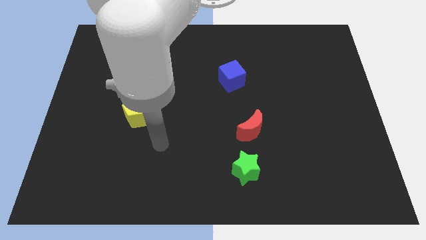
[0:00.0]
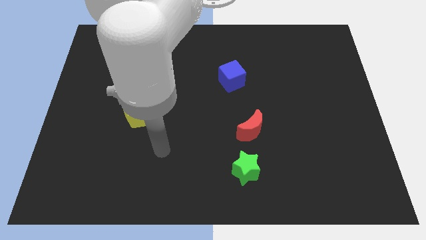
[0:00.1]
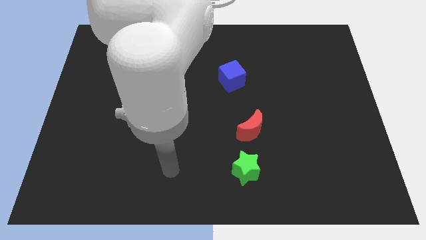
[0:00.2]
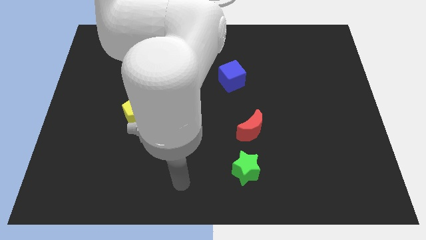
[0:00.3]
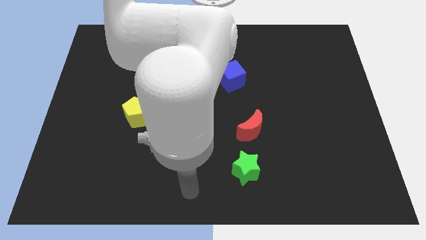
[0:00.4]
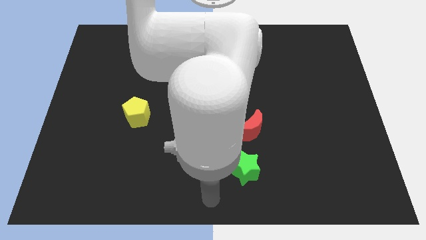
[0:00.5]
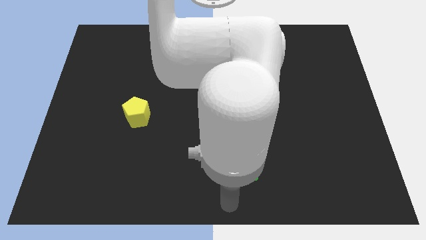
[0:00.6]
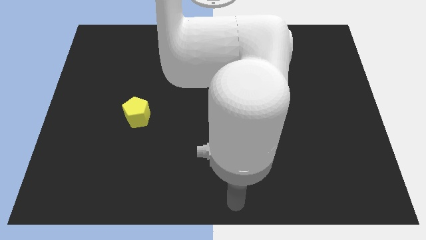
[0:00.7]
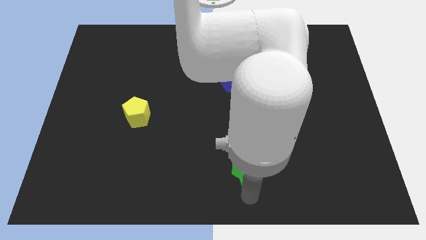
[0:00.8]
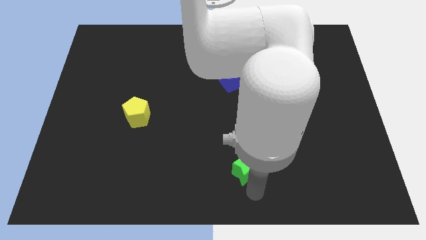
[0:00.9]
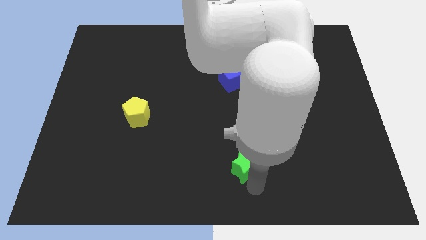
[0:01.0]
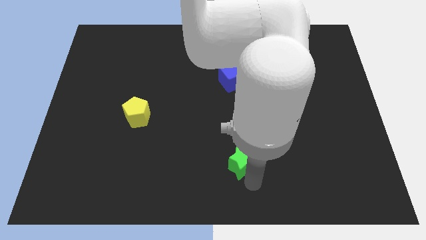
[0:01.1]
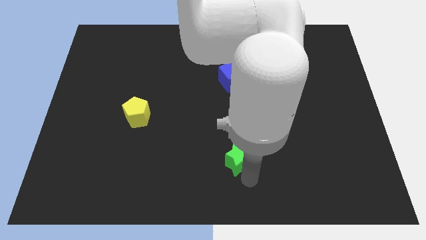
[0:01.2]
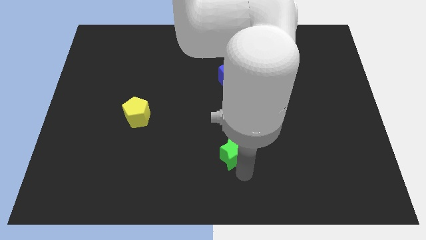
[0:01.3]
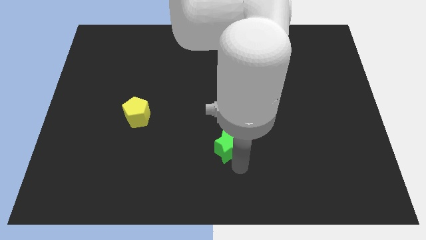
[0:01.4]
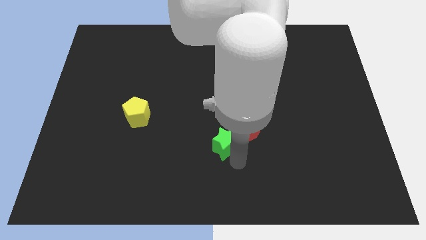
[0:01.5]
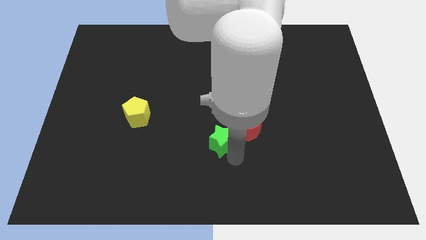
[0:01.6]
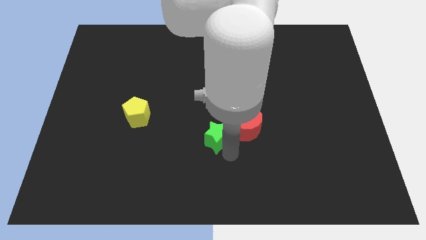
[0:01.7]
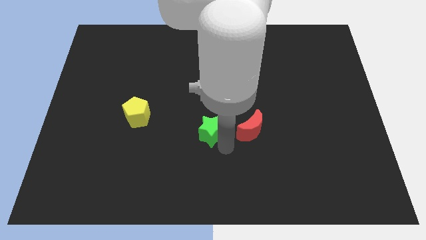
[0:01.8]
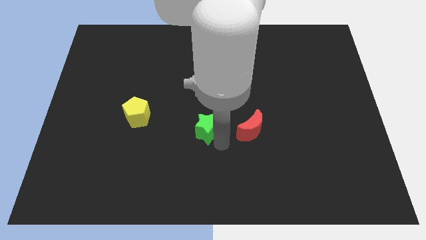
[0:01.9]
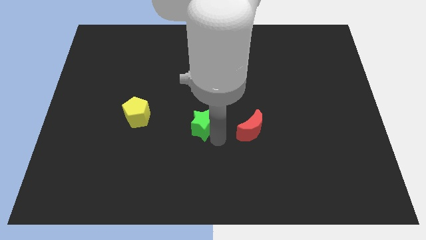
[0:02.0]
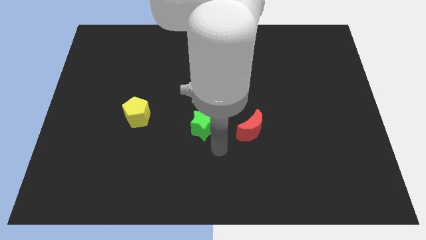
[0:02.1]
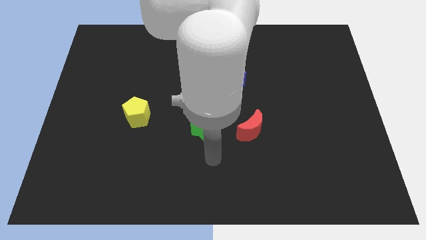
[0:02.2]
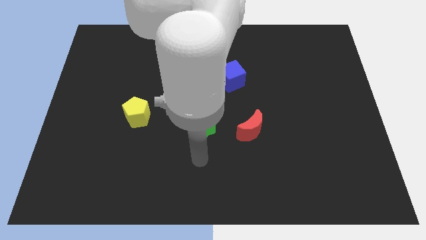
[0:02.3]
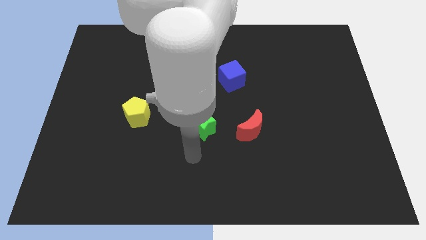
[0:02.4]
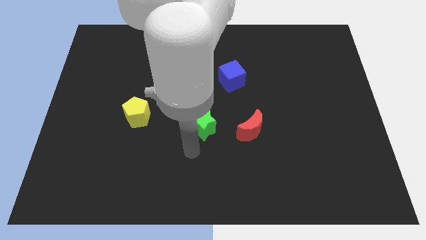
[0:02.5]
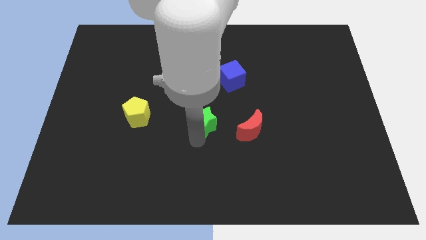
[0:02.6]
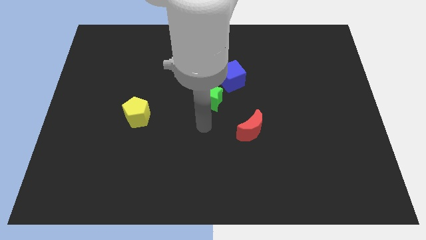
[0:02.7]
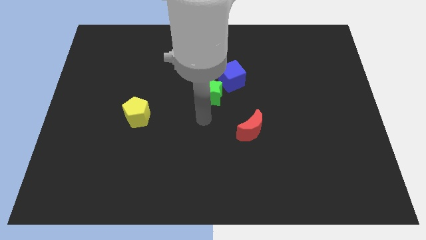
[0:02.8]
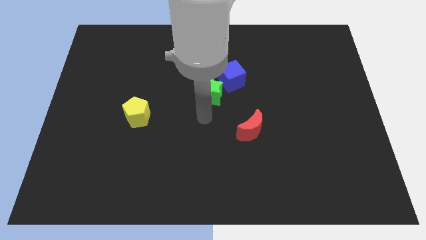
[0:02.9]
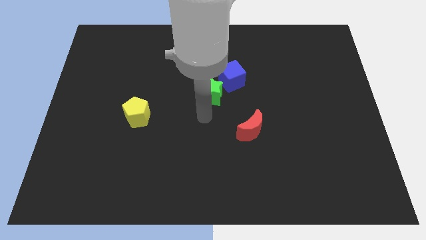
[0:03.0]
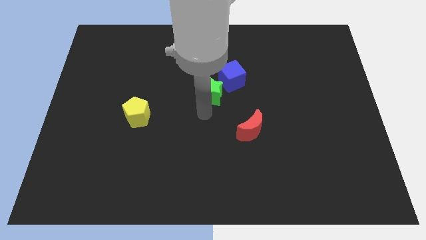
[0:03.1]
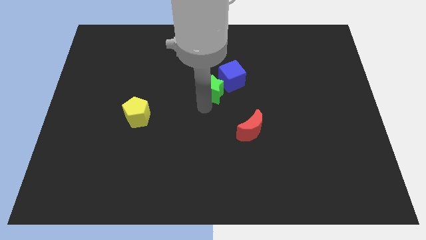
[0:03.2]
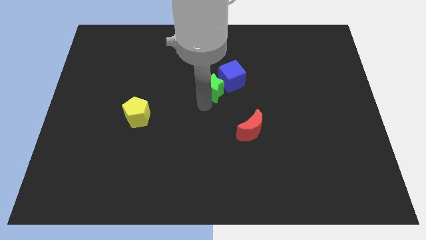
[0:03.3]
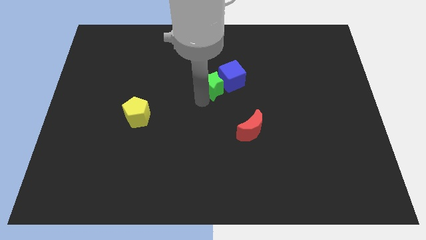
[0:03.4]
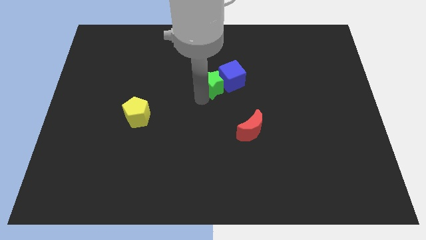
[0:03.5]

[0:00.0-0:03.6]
push the star to the cube

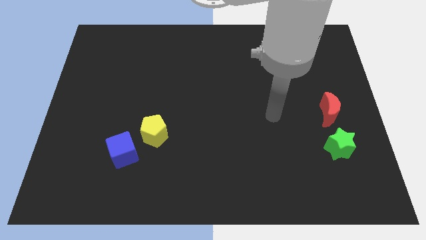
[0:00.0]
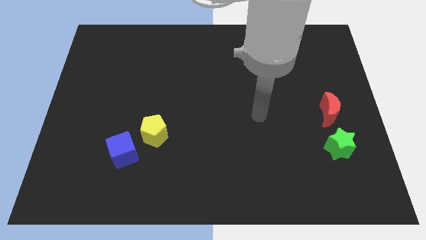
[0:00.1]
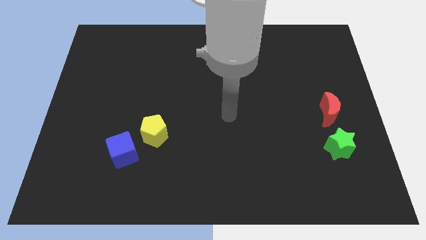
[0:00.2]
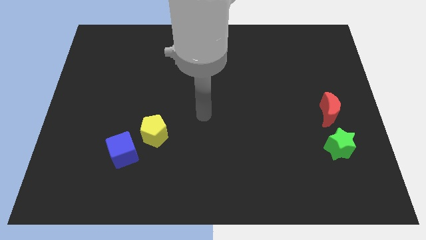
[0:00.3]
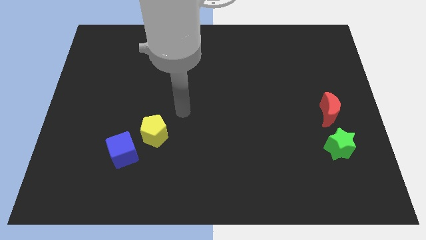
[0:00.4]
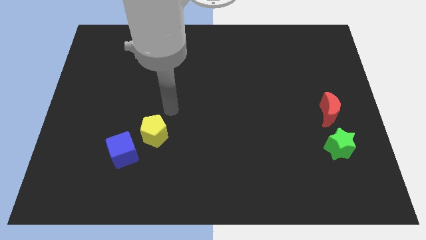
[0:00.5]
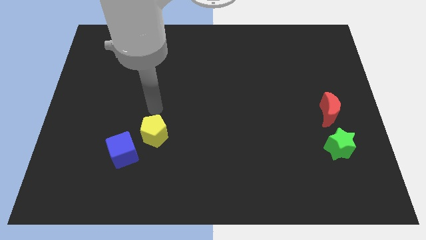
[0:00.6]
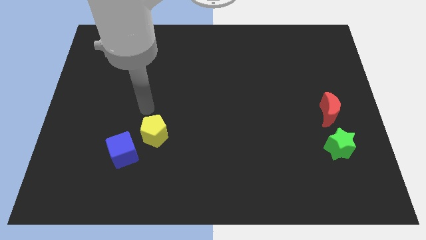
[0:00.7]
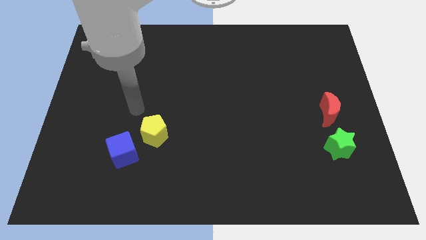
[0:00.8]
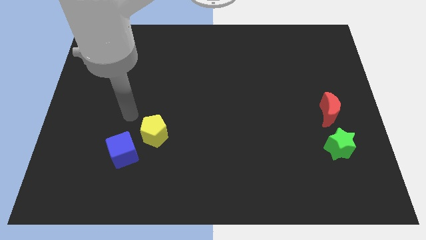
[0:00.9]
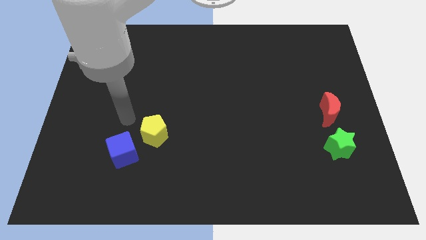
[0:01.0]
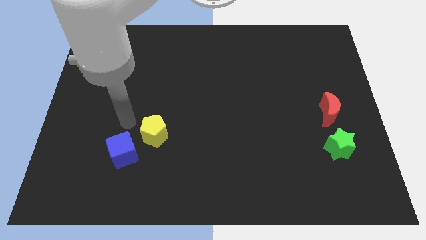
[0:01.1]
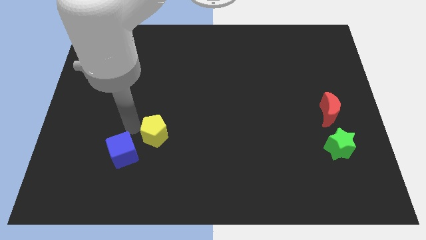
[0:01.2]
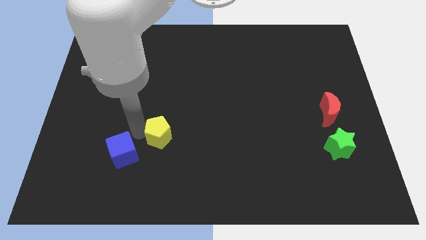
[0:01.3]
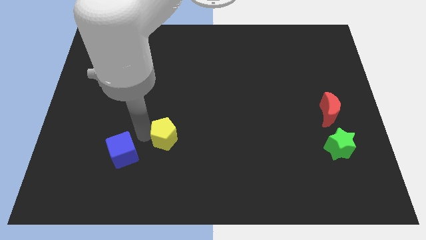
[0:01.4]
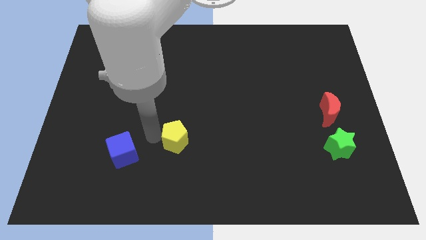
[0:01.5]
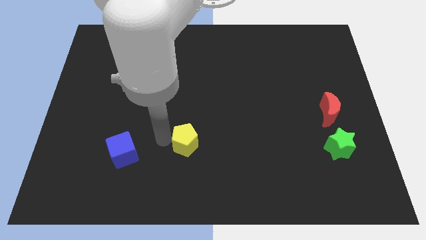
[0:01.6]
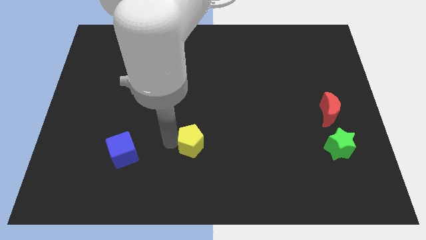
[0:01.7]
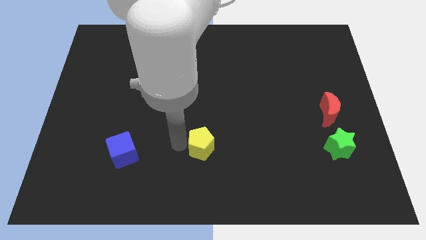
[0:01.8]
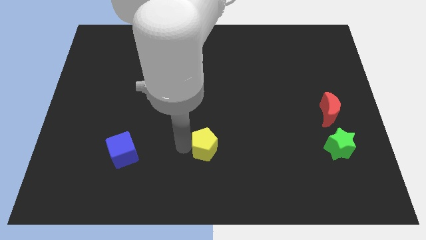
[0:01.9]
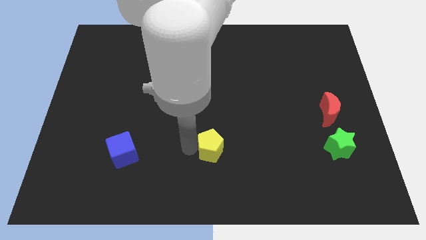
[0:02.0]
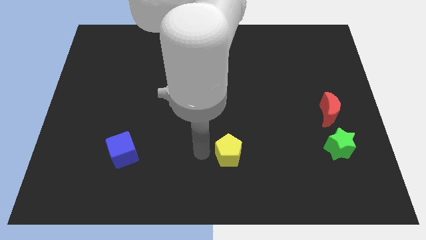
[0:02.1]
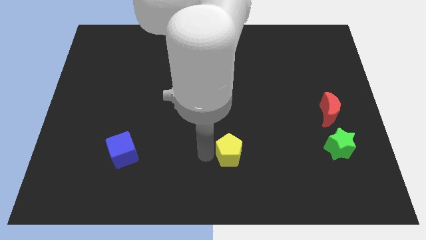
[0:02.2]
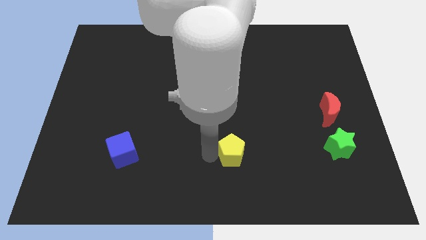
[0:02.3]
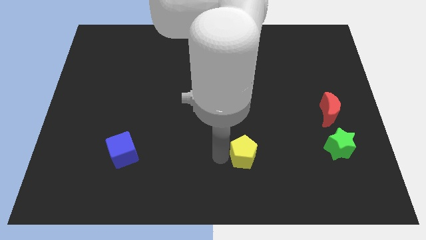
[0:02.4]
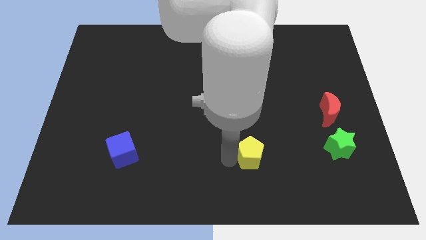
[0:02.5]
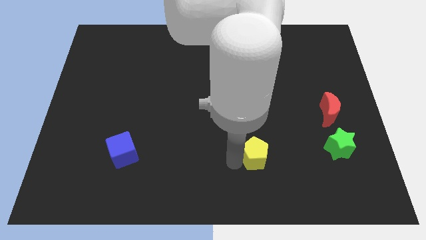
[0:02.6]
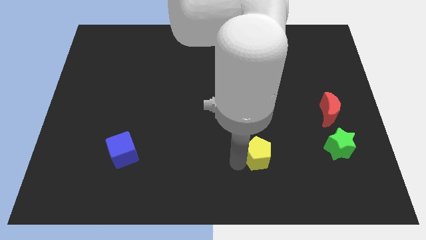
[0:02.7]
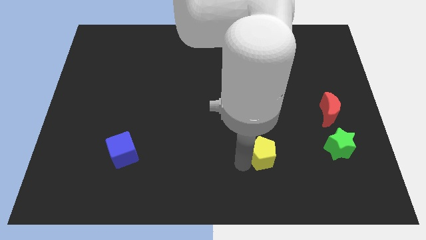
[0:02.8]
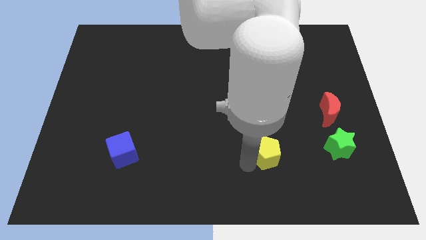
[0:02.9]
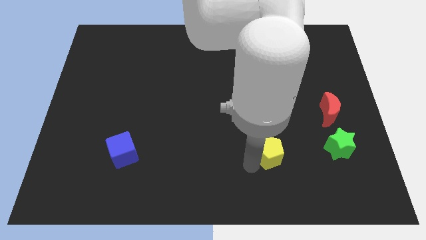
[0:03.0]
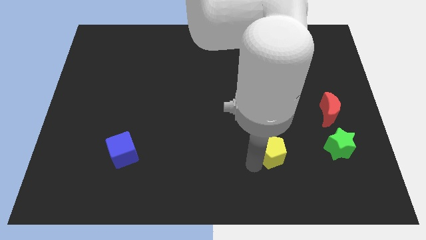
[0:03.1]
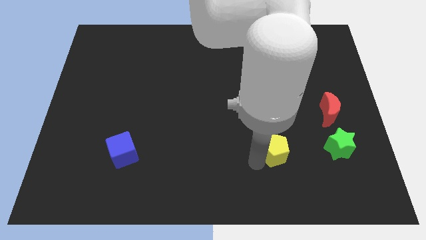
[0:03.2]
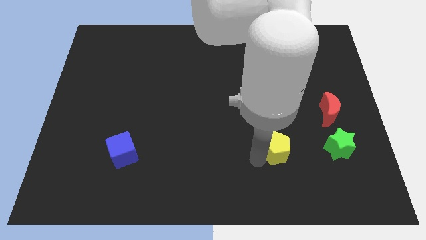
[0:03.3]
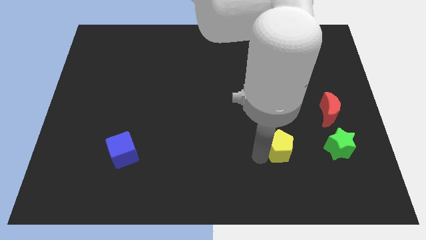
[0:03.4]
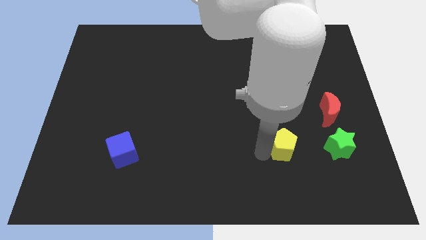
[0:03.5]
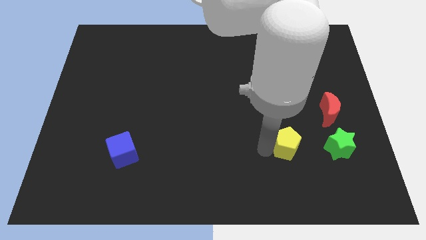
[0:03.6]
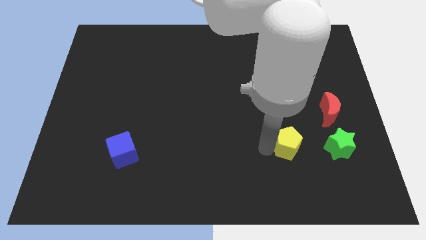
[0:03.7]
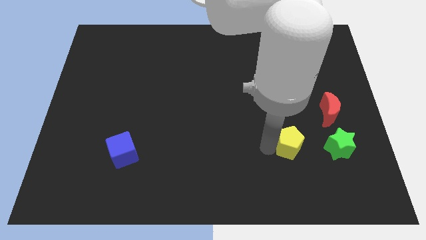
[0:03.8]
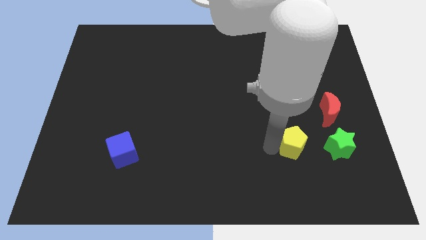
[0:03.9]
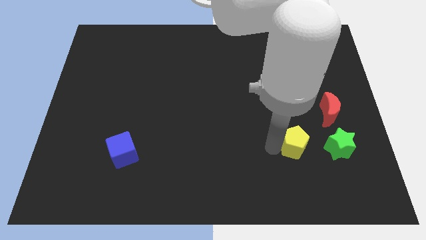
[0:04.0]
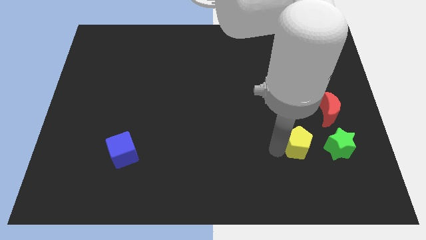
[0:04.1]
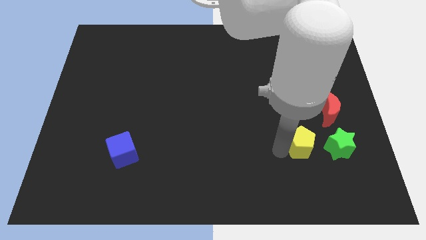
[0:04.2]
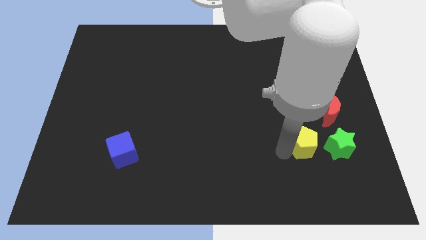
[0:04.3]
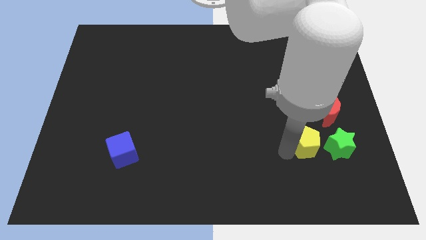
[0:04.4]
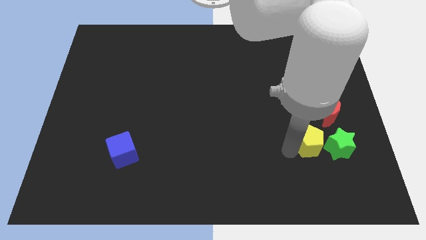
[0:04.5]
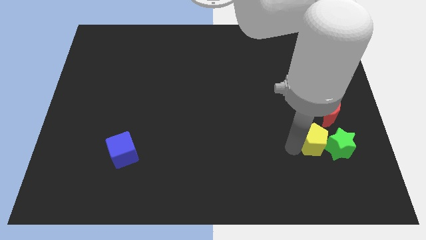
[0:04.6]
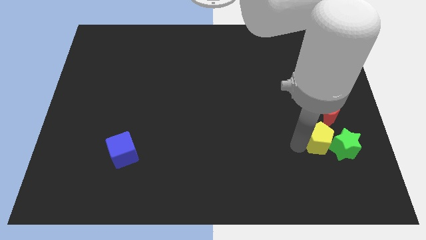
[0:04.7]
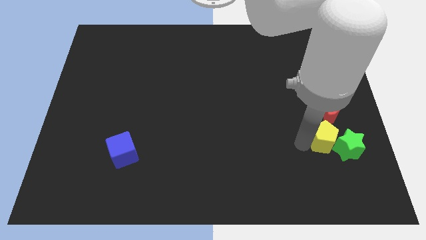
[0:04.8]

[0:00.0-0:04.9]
put the yellow pentagon next to the star

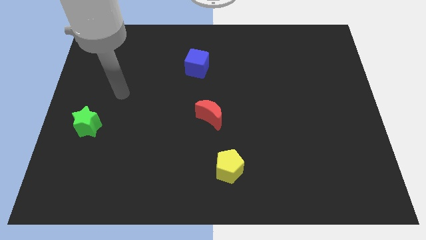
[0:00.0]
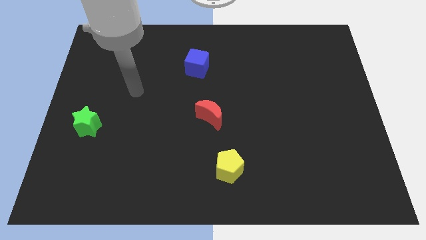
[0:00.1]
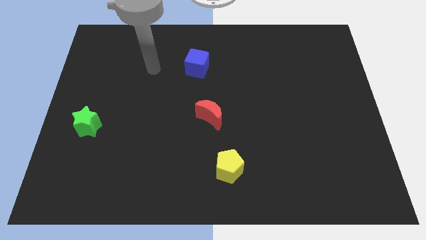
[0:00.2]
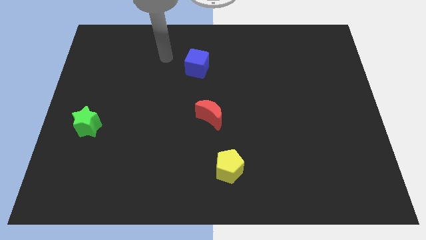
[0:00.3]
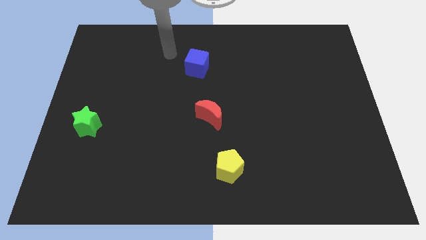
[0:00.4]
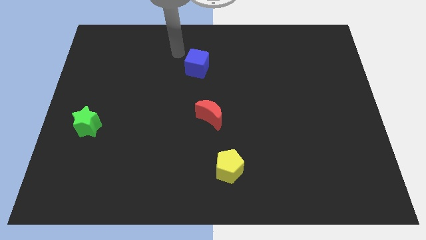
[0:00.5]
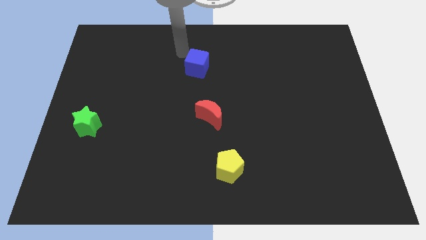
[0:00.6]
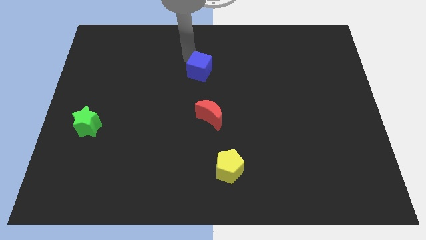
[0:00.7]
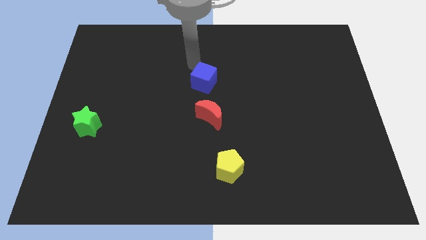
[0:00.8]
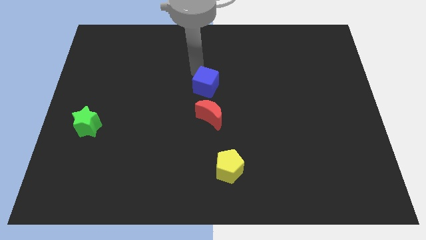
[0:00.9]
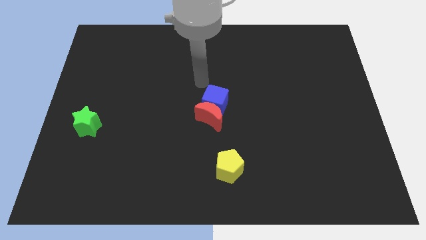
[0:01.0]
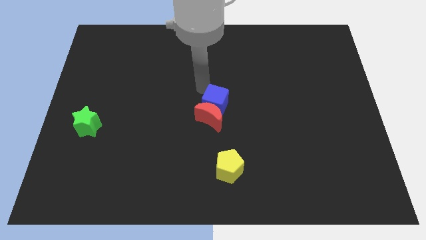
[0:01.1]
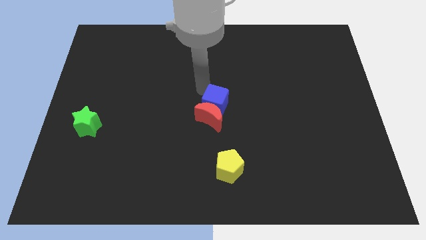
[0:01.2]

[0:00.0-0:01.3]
push the blue block towards the moon
